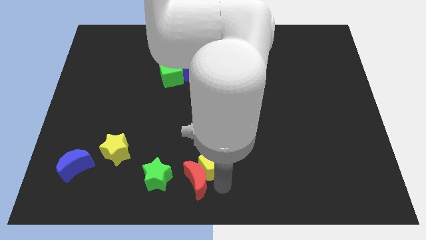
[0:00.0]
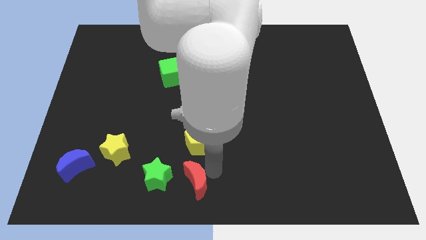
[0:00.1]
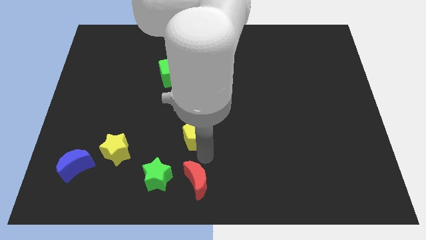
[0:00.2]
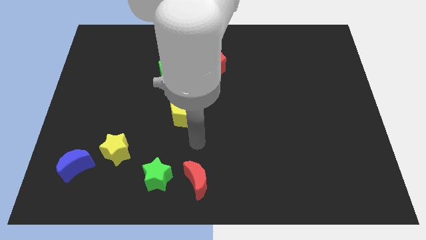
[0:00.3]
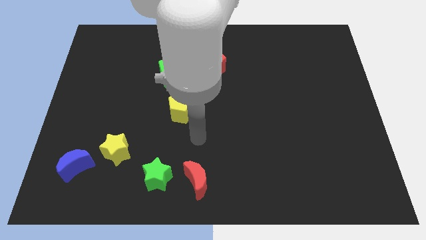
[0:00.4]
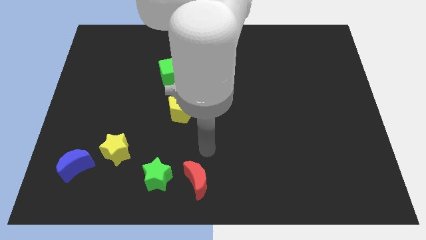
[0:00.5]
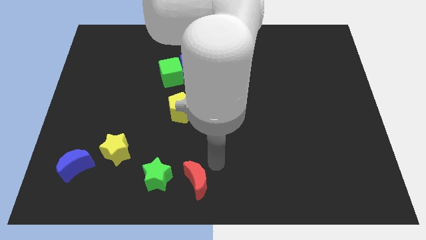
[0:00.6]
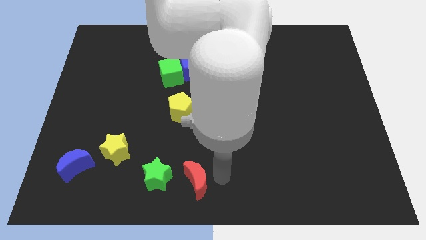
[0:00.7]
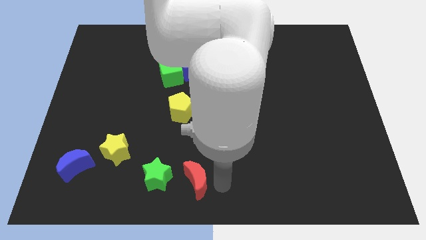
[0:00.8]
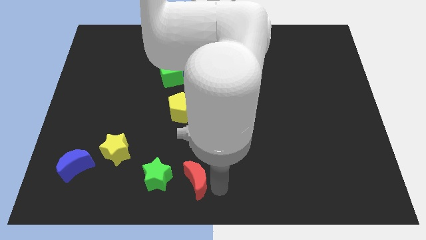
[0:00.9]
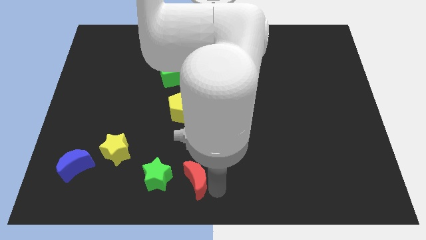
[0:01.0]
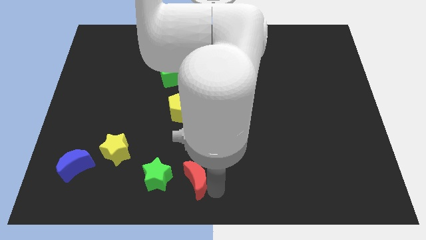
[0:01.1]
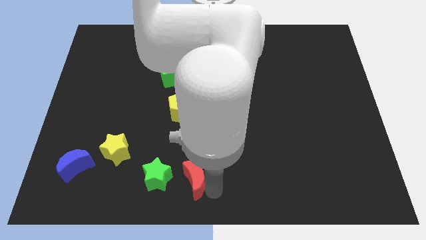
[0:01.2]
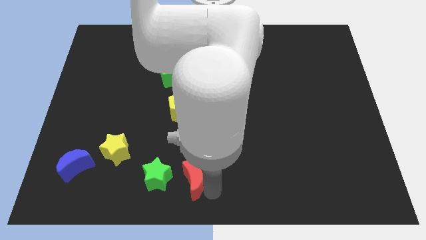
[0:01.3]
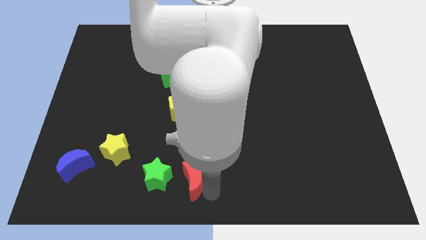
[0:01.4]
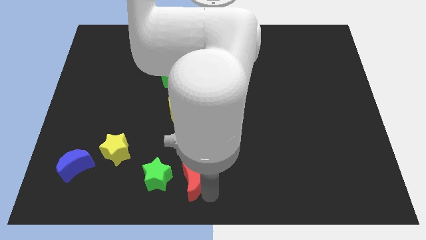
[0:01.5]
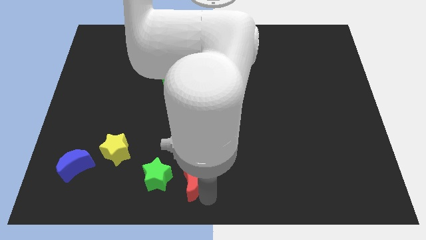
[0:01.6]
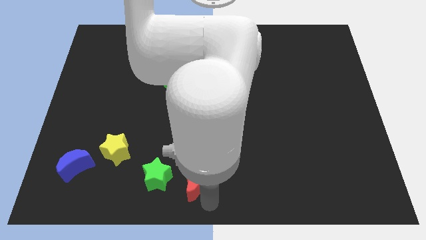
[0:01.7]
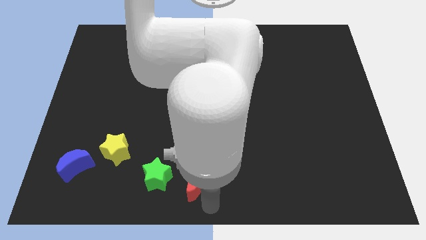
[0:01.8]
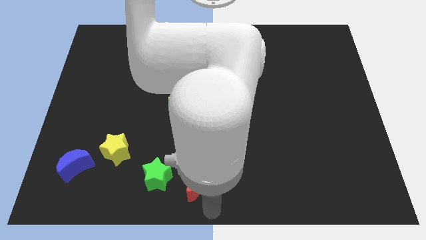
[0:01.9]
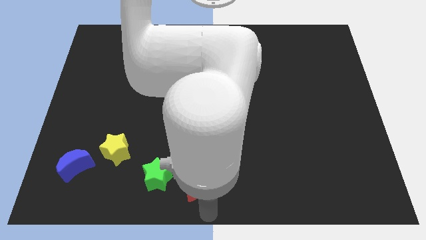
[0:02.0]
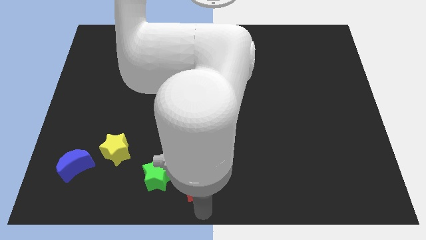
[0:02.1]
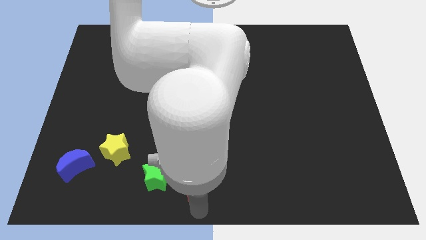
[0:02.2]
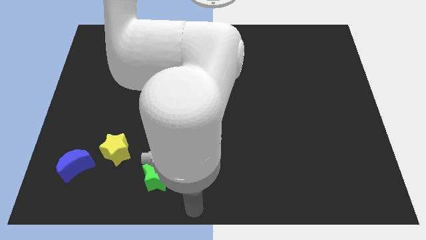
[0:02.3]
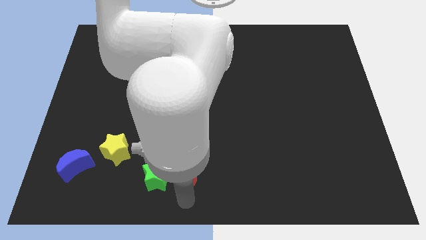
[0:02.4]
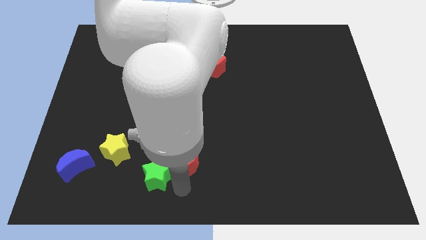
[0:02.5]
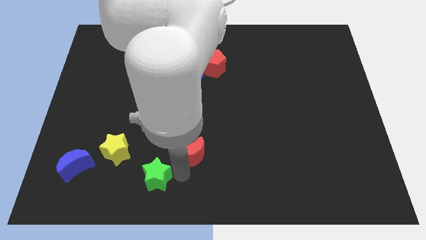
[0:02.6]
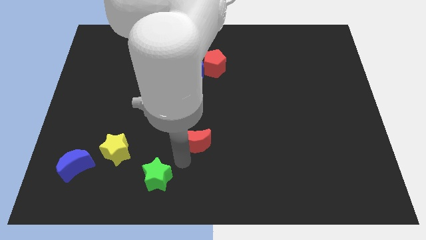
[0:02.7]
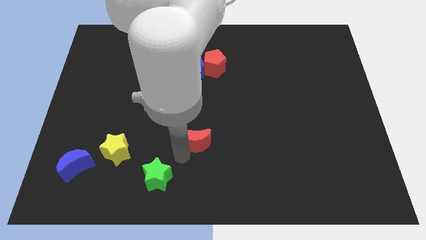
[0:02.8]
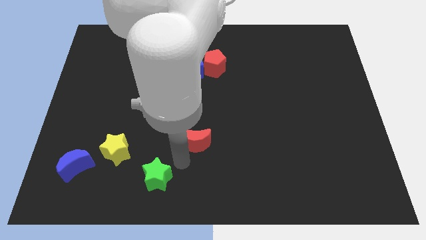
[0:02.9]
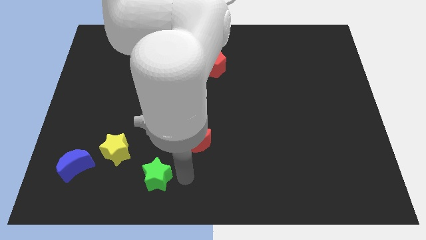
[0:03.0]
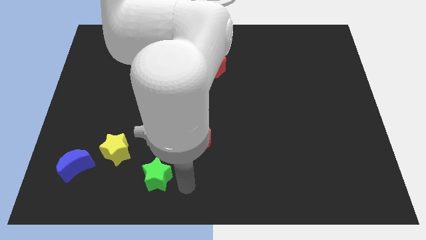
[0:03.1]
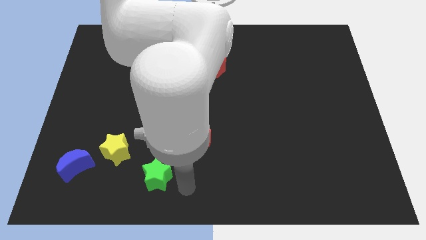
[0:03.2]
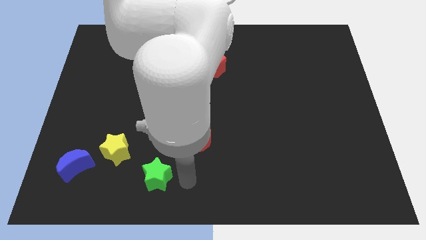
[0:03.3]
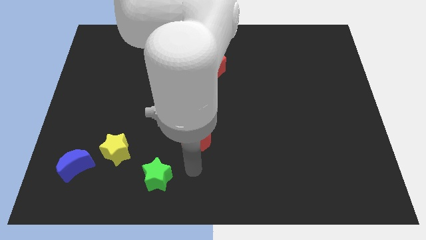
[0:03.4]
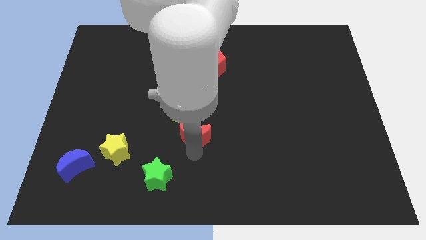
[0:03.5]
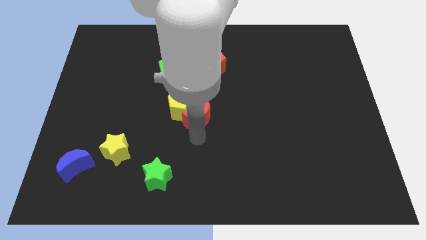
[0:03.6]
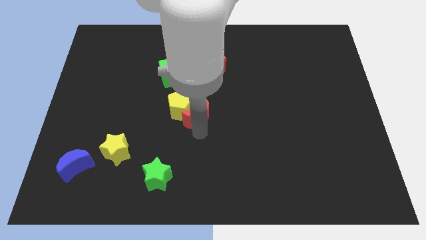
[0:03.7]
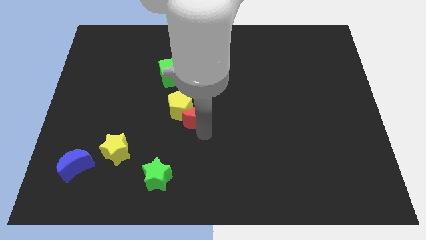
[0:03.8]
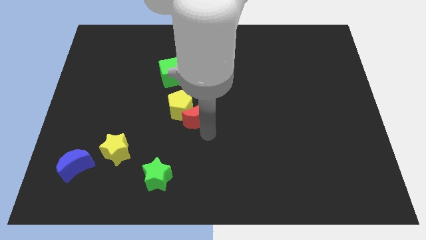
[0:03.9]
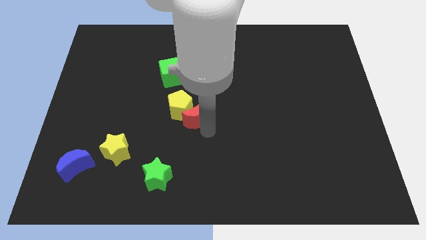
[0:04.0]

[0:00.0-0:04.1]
push the yellow pentagon and red moon to the bottom right side of the green cube

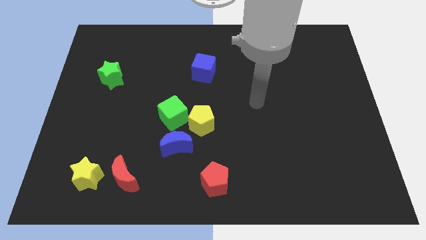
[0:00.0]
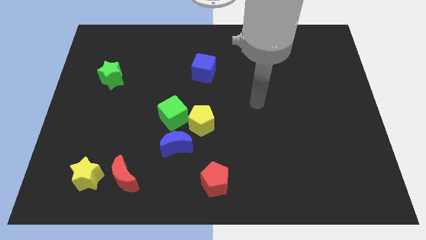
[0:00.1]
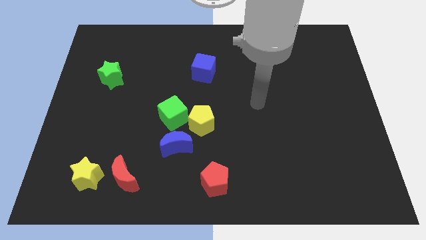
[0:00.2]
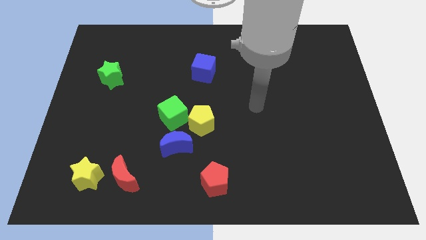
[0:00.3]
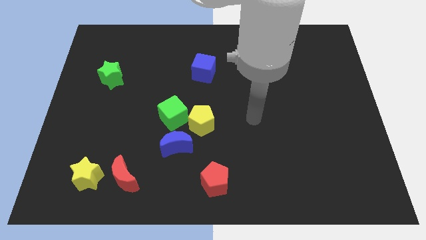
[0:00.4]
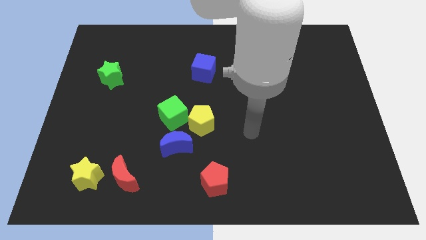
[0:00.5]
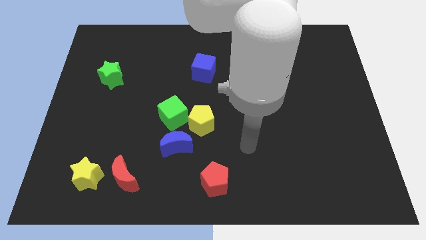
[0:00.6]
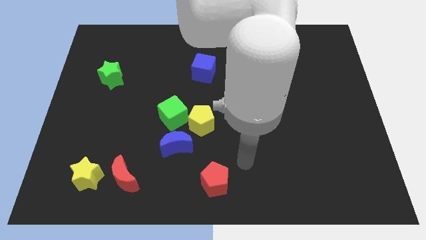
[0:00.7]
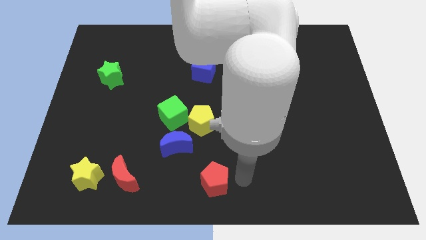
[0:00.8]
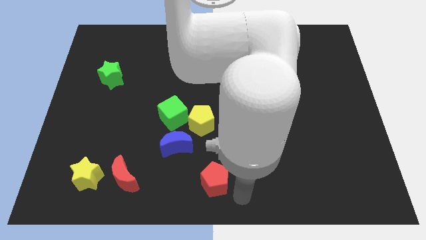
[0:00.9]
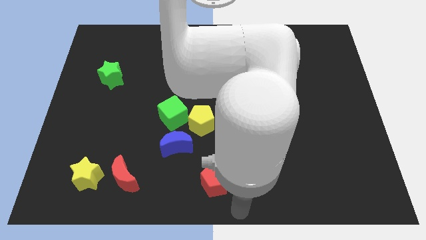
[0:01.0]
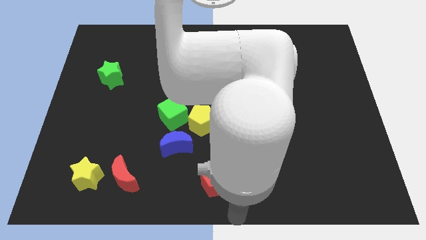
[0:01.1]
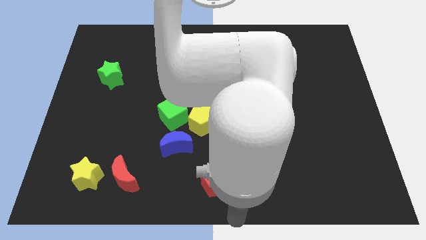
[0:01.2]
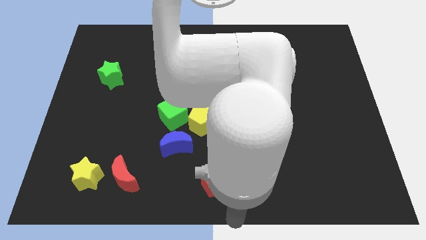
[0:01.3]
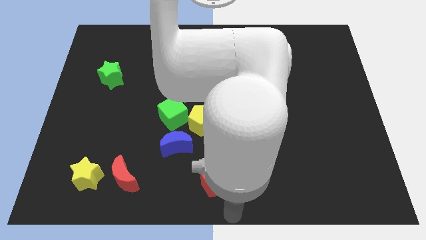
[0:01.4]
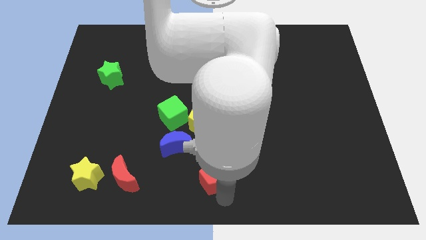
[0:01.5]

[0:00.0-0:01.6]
point your hand at bottom center of the board

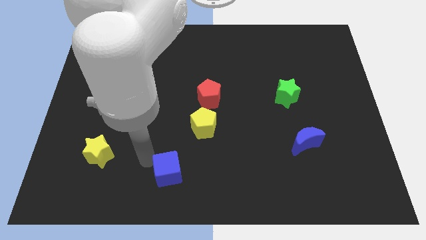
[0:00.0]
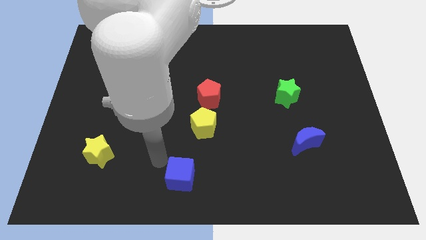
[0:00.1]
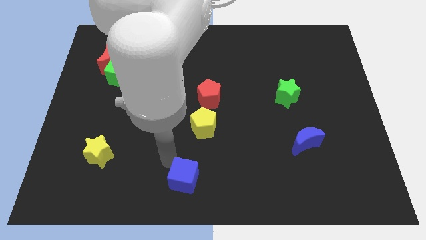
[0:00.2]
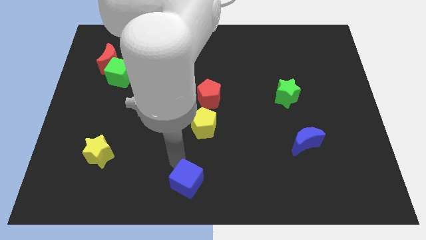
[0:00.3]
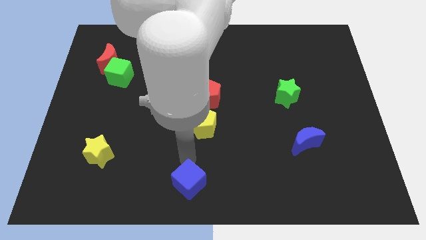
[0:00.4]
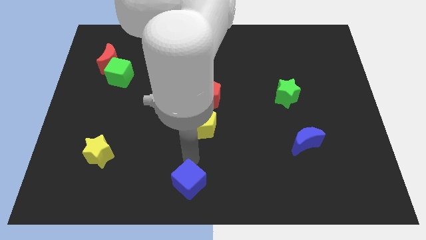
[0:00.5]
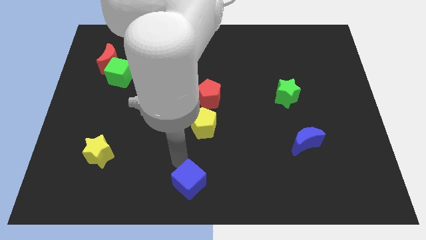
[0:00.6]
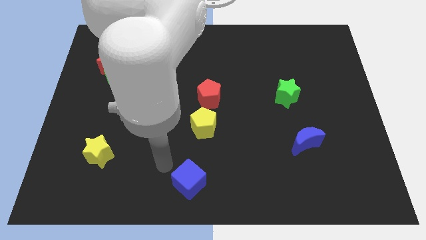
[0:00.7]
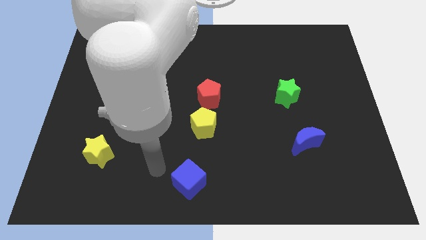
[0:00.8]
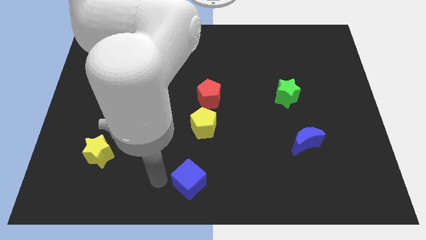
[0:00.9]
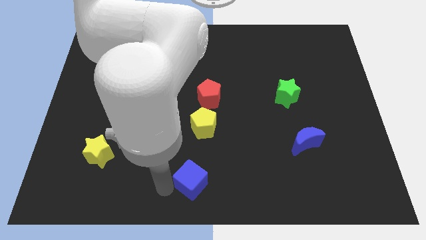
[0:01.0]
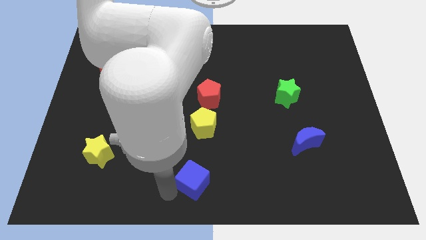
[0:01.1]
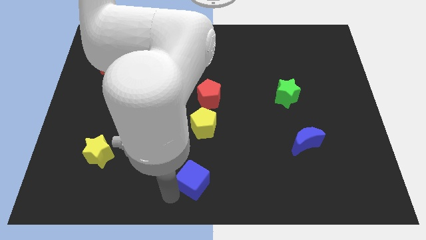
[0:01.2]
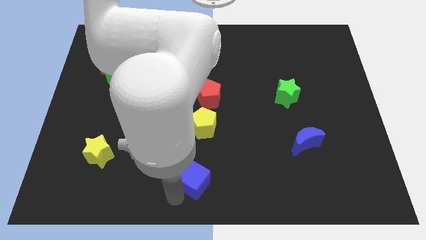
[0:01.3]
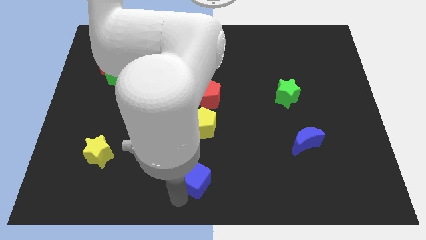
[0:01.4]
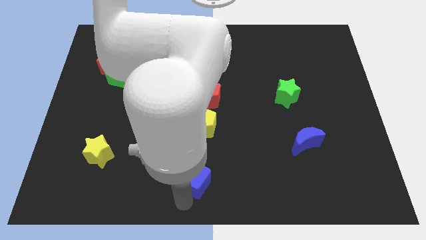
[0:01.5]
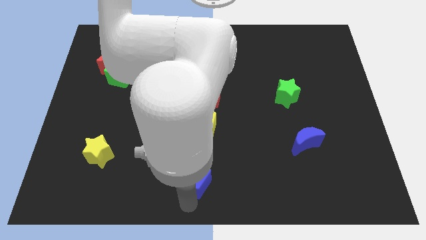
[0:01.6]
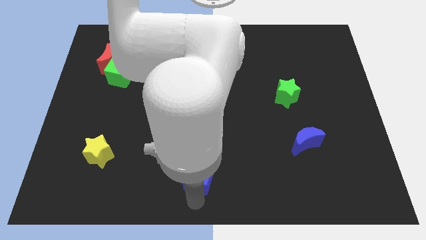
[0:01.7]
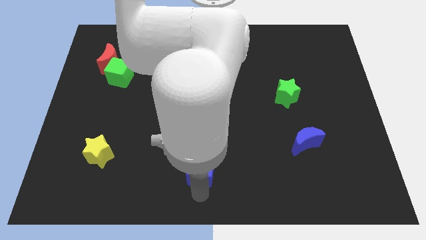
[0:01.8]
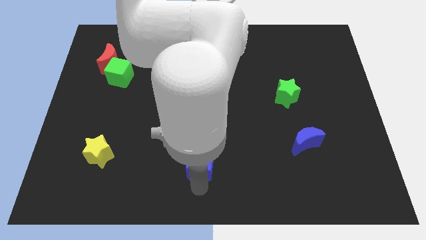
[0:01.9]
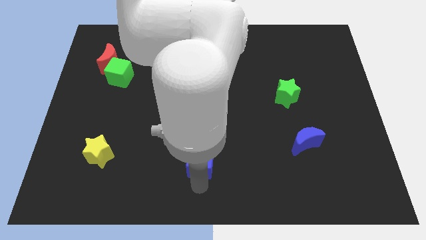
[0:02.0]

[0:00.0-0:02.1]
move the blue cube close to the yellow pentagon

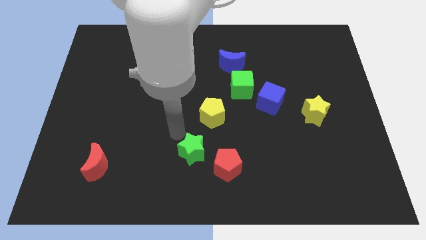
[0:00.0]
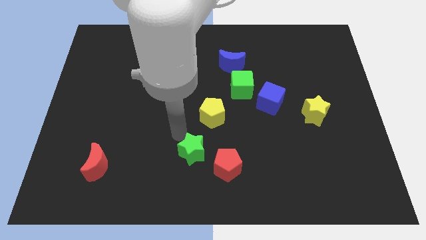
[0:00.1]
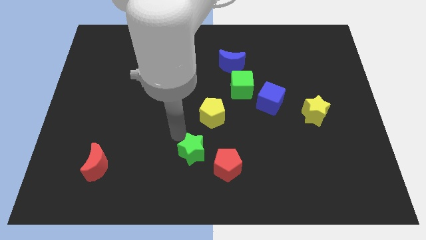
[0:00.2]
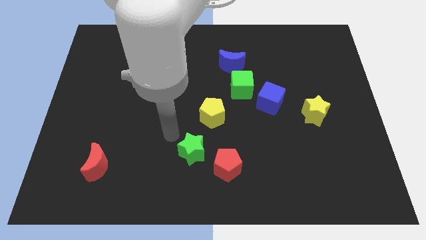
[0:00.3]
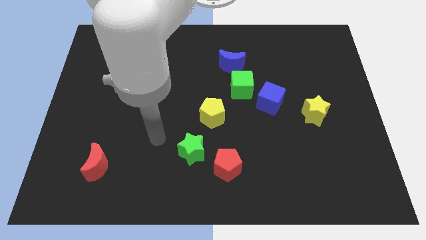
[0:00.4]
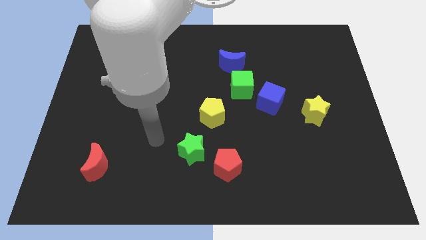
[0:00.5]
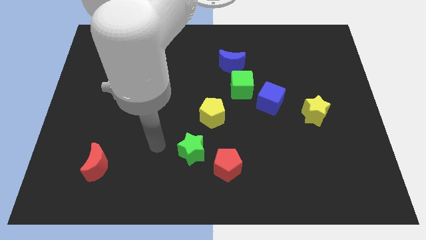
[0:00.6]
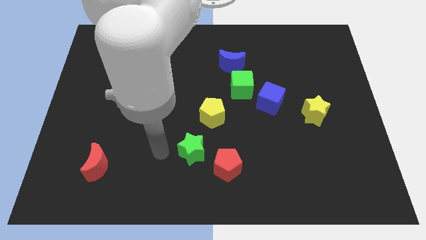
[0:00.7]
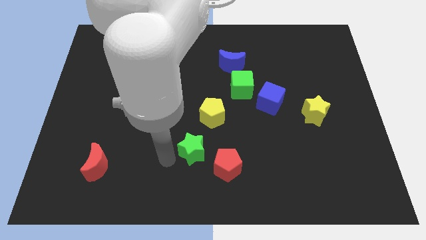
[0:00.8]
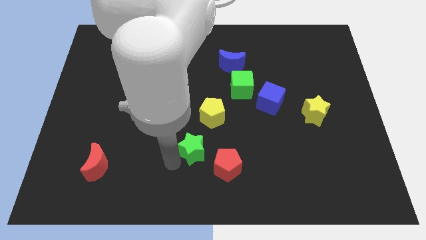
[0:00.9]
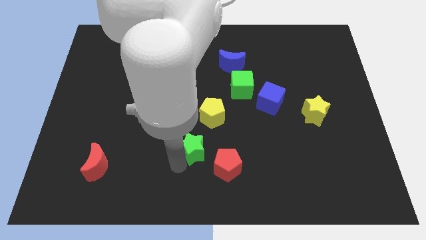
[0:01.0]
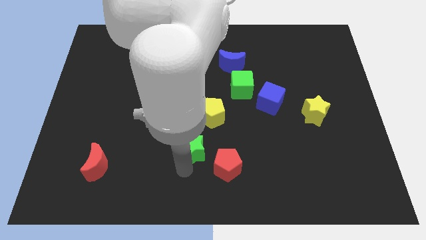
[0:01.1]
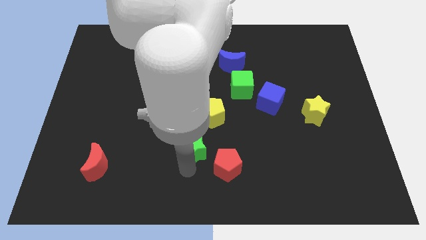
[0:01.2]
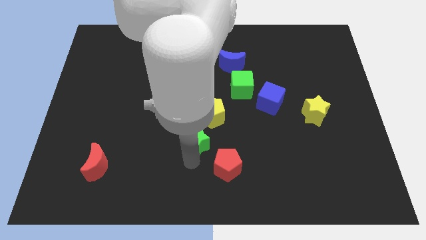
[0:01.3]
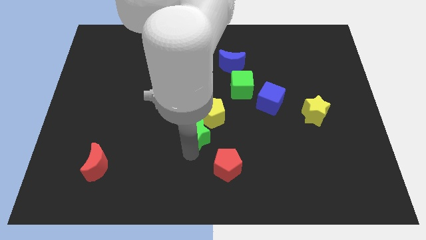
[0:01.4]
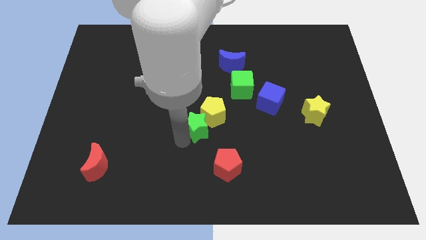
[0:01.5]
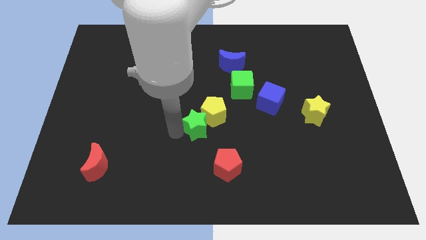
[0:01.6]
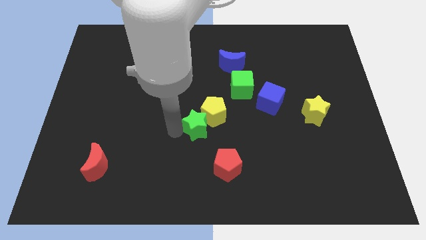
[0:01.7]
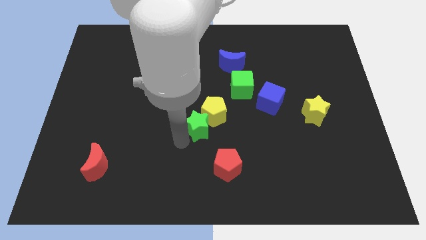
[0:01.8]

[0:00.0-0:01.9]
push green star to the bottom left side of the yellow pentagon
